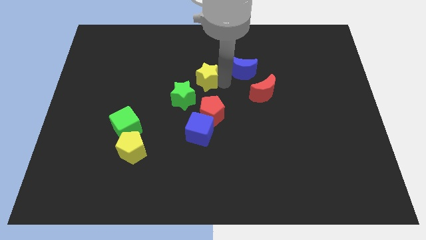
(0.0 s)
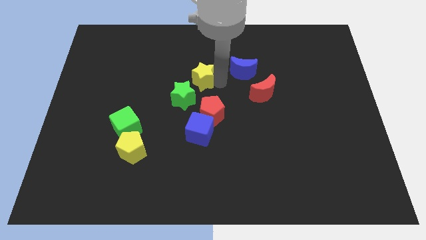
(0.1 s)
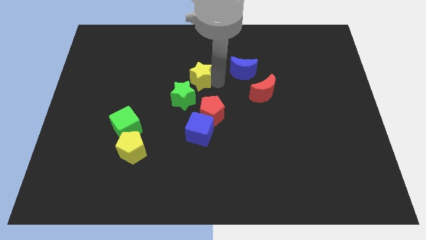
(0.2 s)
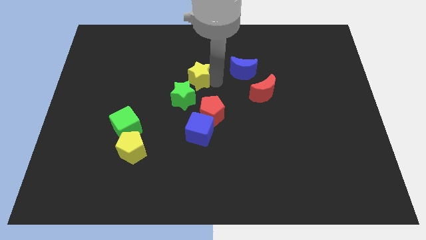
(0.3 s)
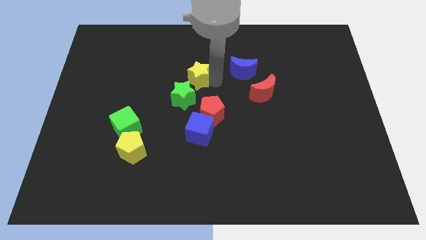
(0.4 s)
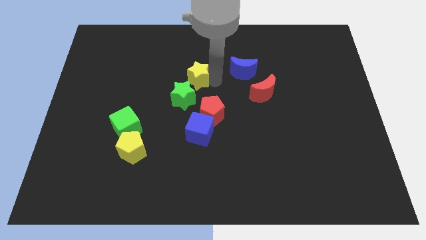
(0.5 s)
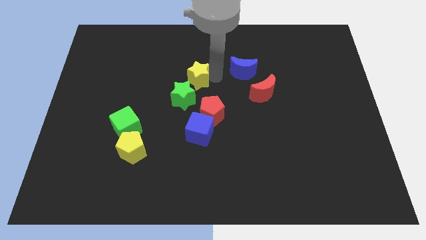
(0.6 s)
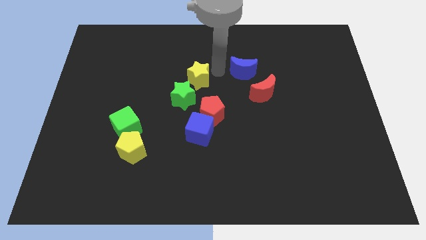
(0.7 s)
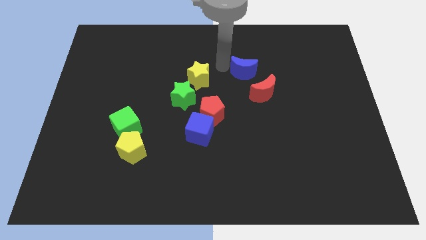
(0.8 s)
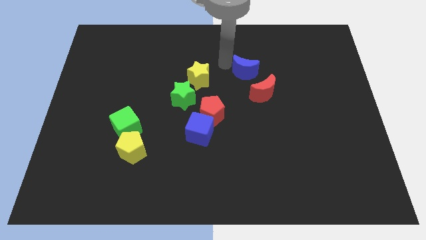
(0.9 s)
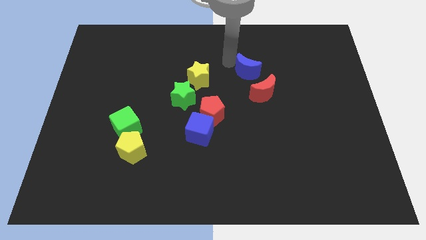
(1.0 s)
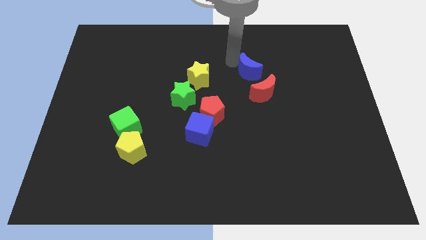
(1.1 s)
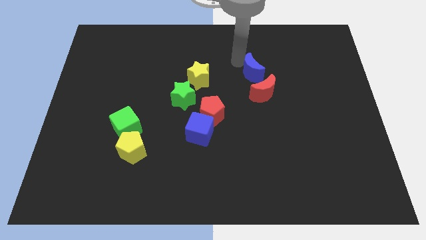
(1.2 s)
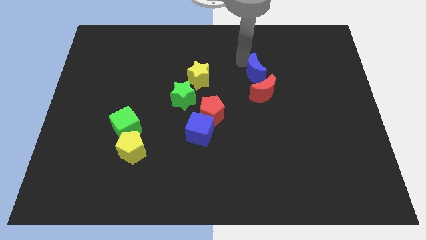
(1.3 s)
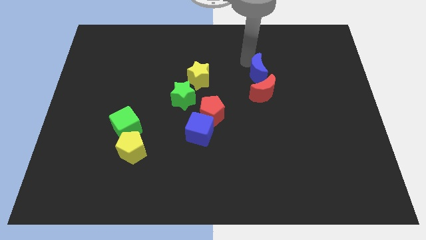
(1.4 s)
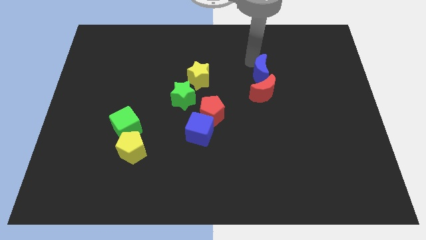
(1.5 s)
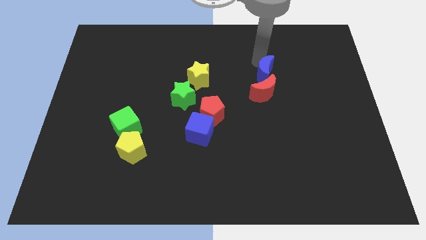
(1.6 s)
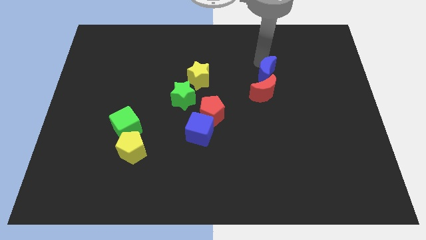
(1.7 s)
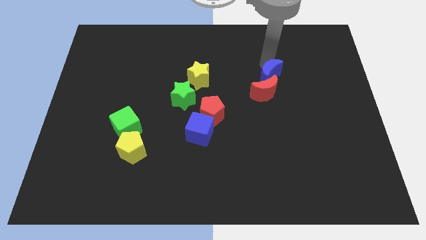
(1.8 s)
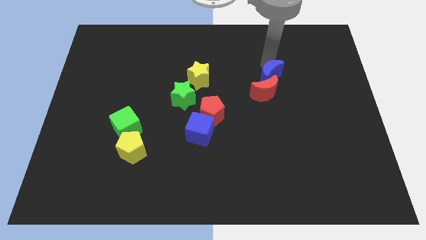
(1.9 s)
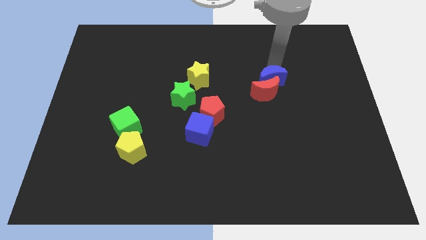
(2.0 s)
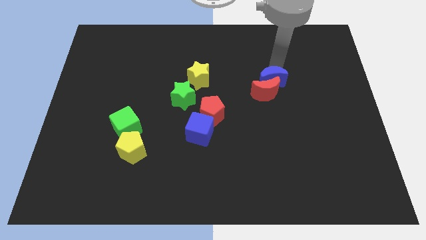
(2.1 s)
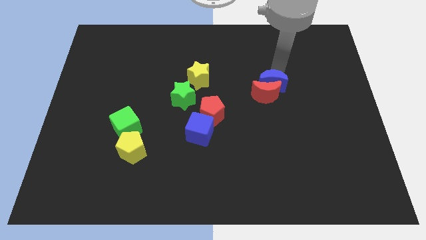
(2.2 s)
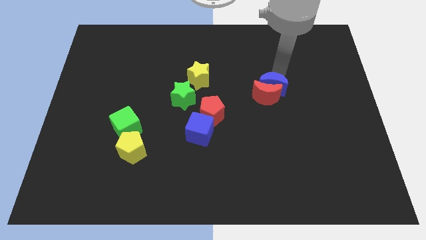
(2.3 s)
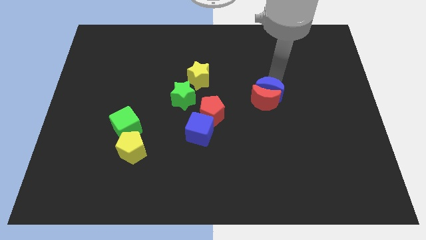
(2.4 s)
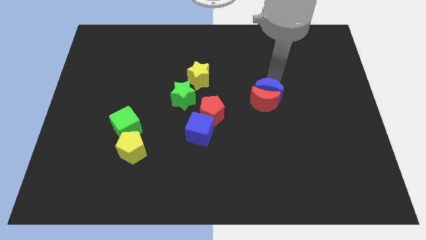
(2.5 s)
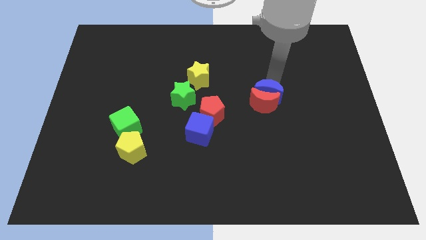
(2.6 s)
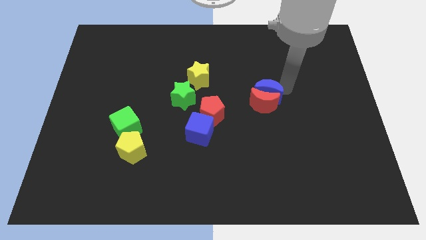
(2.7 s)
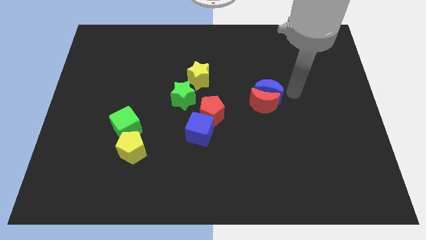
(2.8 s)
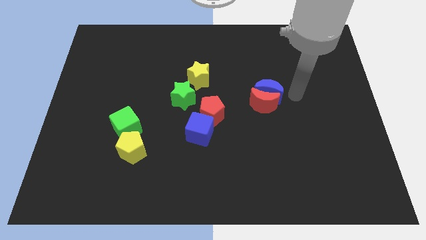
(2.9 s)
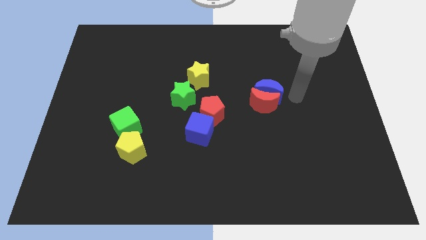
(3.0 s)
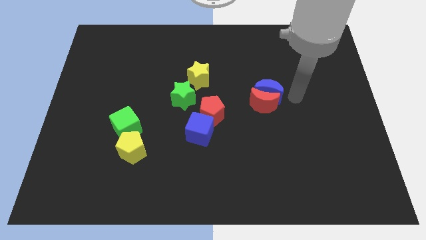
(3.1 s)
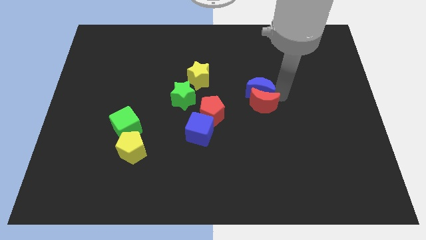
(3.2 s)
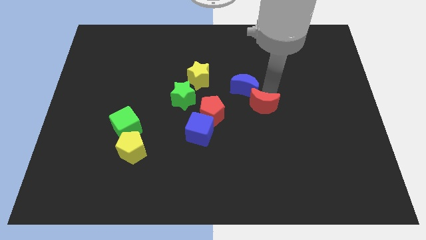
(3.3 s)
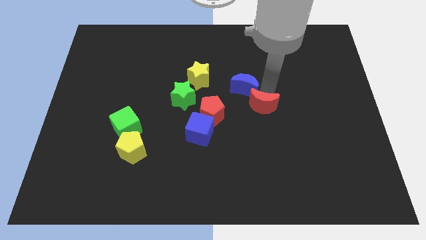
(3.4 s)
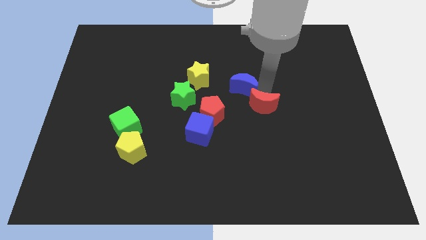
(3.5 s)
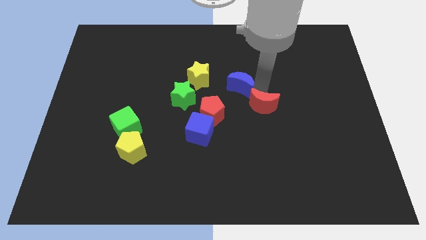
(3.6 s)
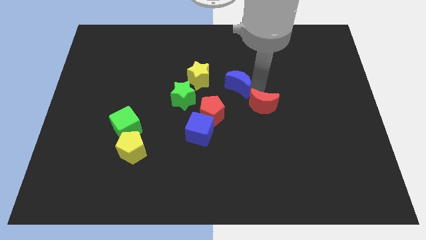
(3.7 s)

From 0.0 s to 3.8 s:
move the blue moon to the right of the yellow star

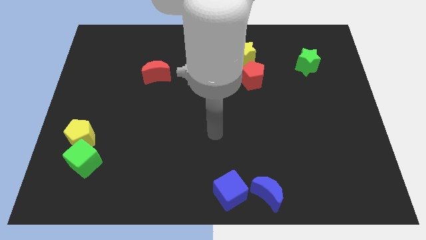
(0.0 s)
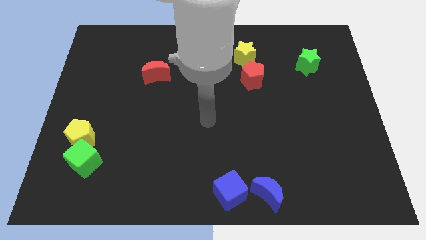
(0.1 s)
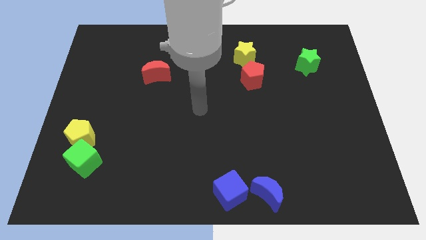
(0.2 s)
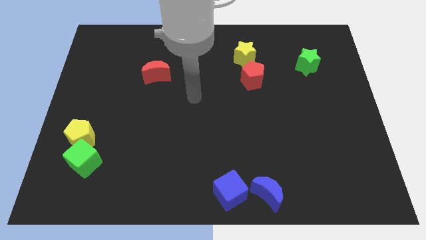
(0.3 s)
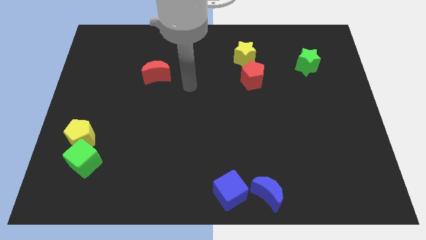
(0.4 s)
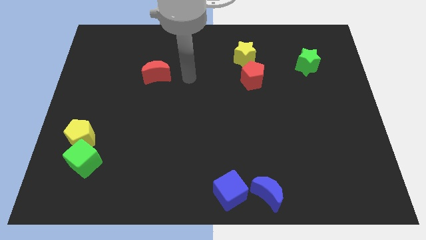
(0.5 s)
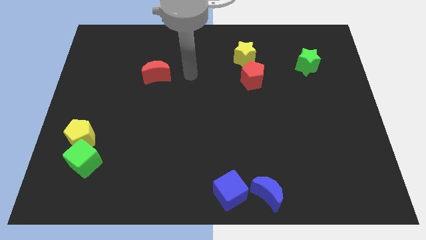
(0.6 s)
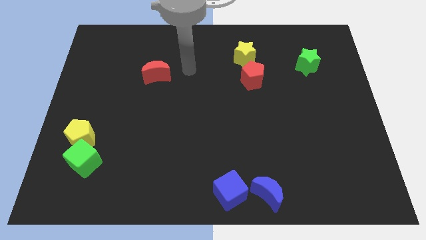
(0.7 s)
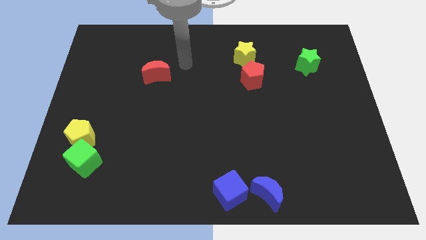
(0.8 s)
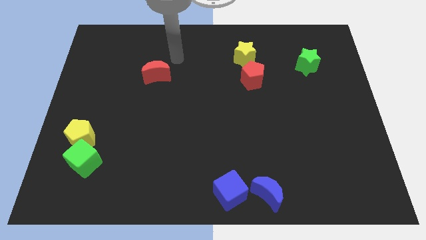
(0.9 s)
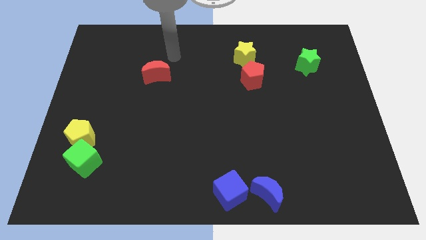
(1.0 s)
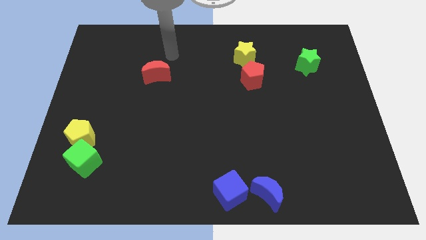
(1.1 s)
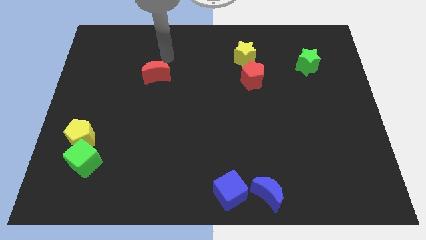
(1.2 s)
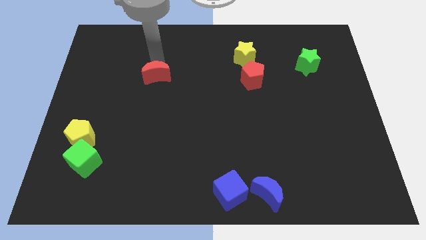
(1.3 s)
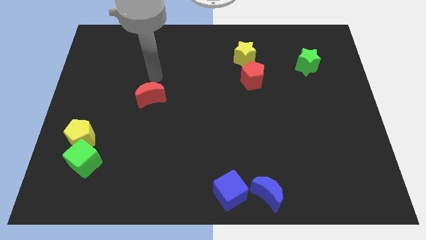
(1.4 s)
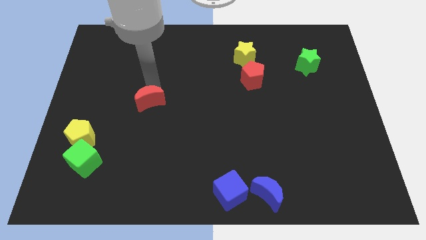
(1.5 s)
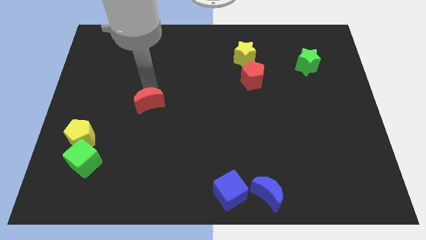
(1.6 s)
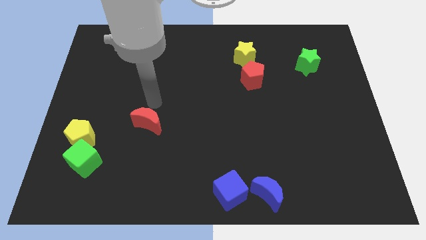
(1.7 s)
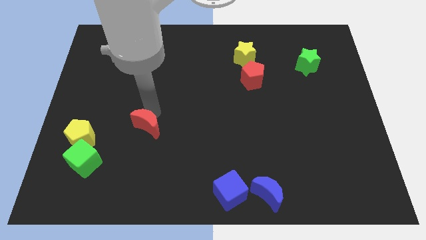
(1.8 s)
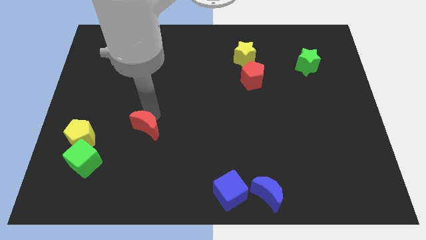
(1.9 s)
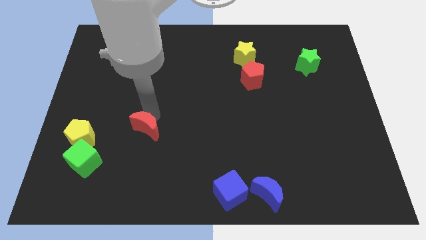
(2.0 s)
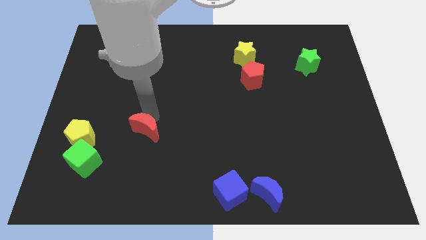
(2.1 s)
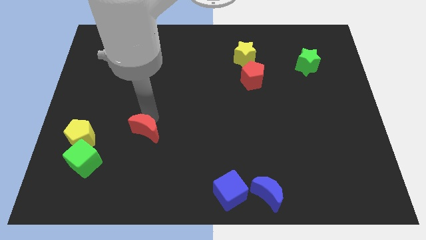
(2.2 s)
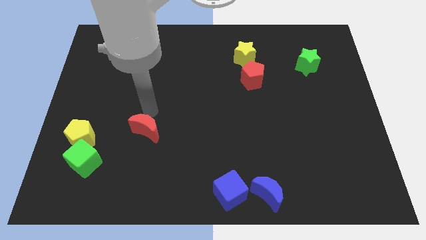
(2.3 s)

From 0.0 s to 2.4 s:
place the red crescent right to the yellow pentagon

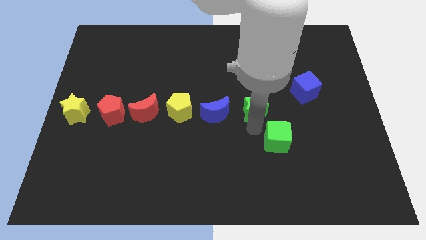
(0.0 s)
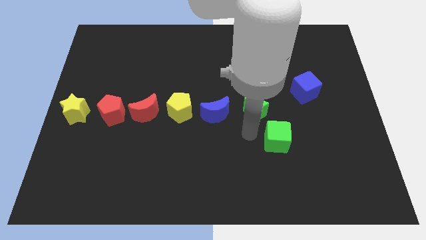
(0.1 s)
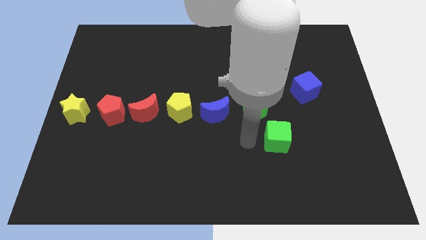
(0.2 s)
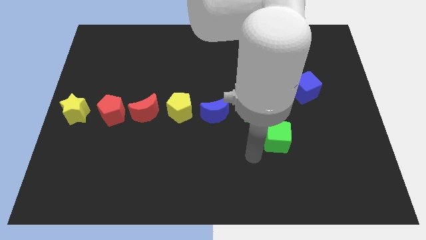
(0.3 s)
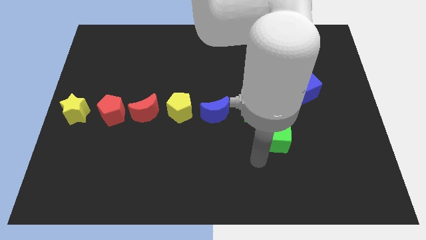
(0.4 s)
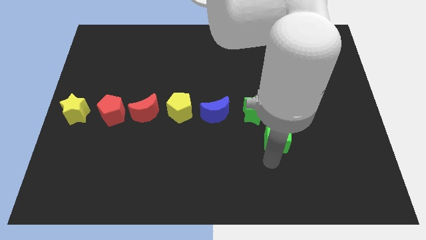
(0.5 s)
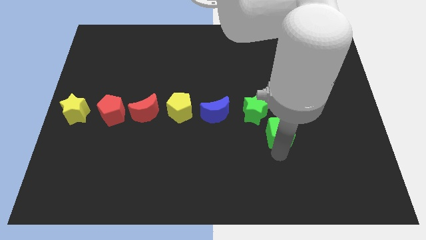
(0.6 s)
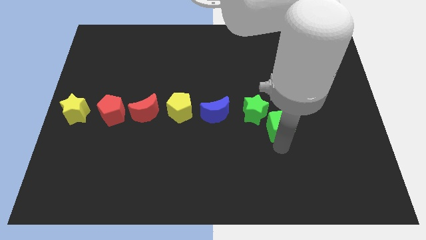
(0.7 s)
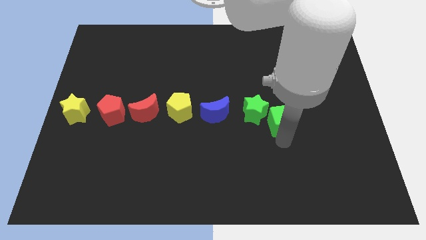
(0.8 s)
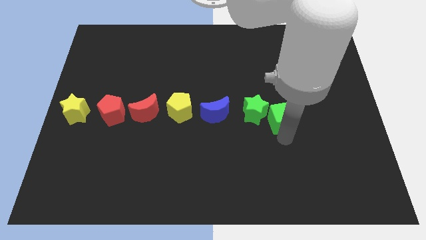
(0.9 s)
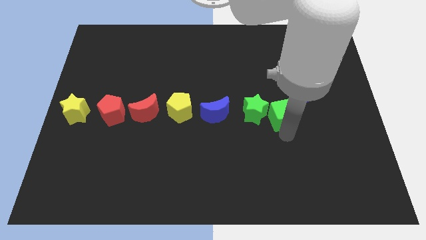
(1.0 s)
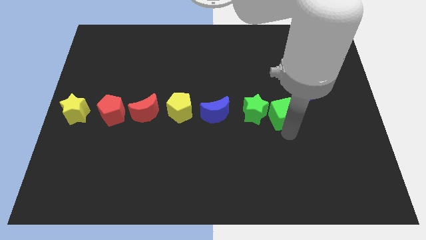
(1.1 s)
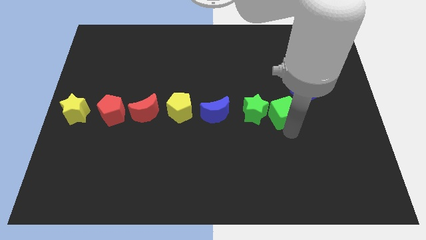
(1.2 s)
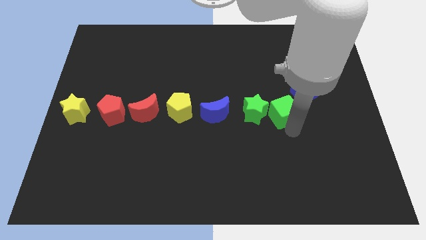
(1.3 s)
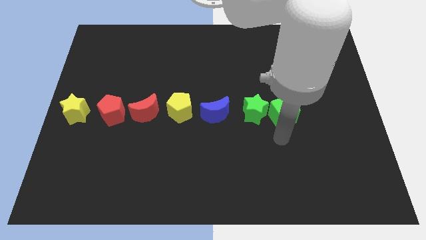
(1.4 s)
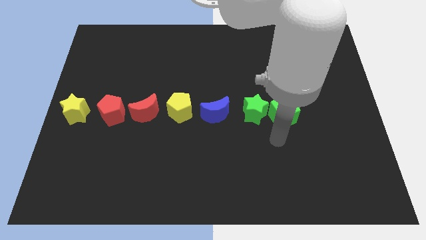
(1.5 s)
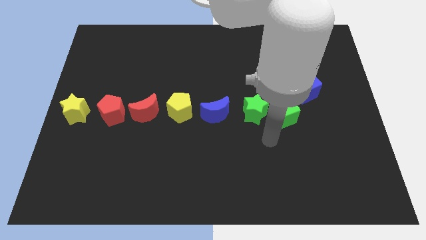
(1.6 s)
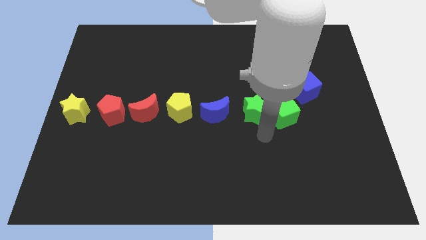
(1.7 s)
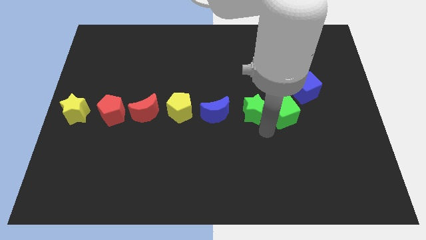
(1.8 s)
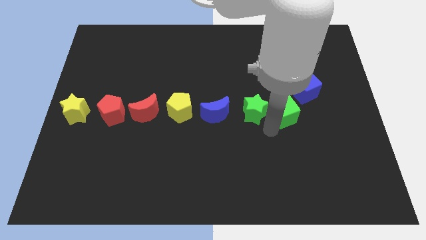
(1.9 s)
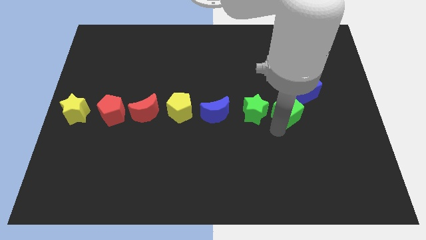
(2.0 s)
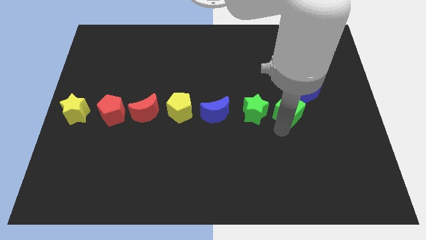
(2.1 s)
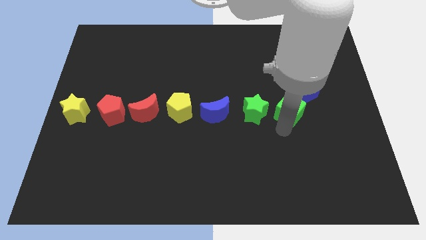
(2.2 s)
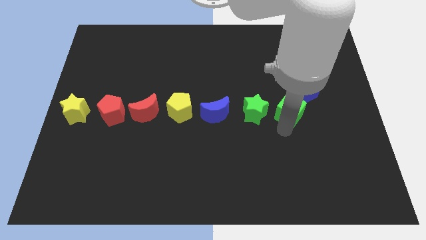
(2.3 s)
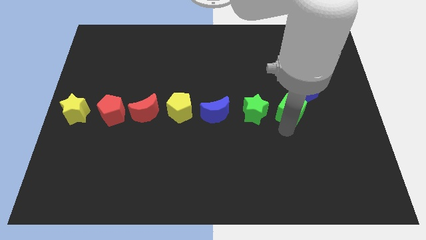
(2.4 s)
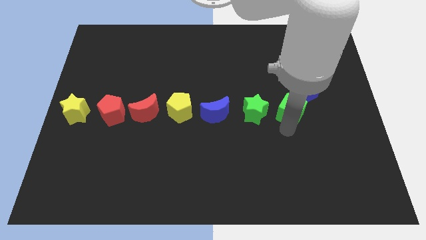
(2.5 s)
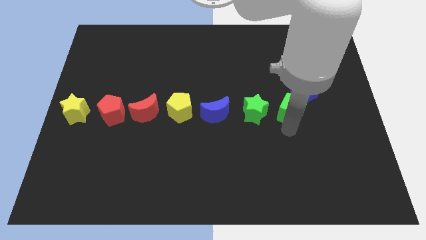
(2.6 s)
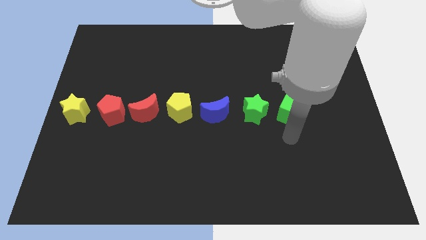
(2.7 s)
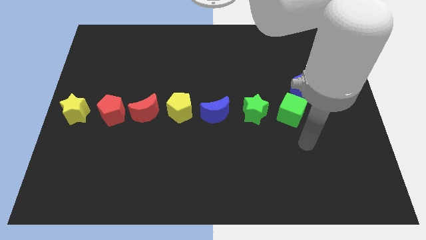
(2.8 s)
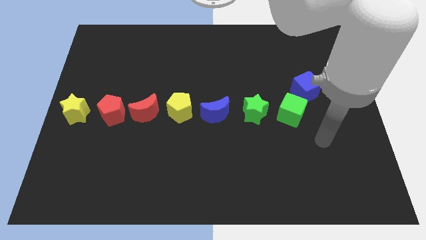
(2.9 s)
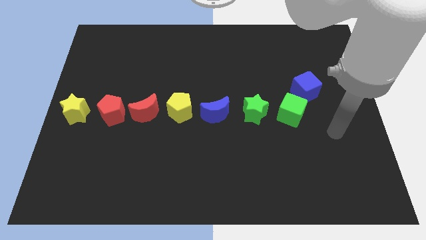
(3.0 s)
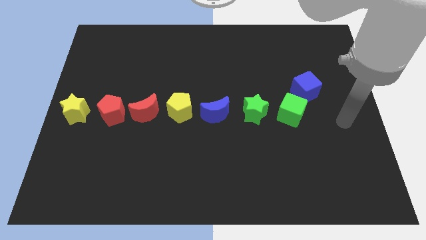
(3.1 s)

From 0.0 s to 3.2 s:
drag the green cube to the right side of the green star
